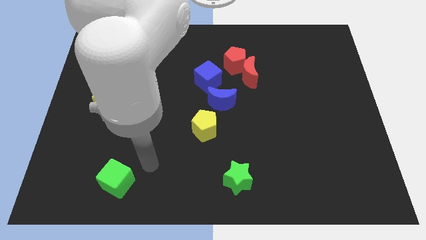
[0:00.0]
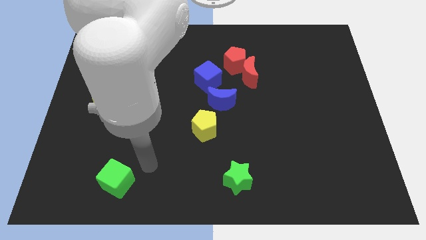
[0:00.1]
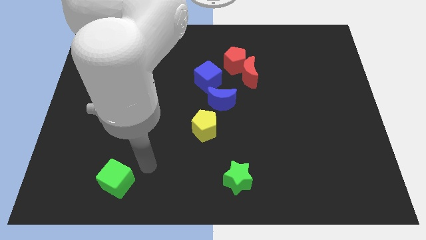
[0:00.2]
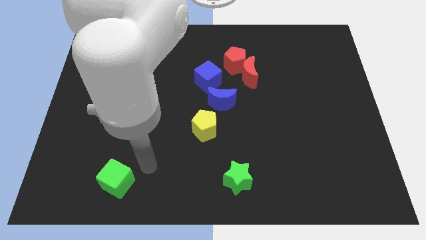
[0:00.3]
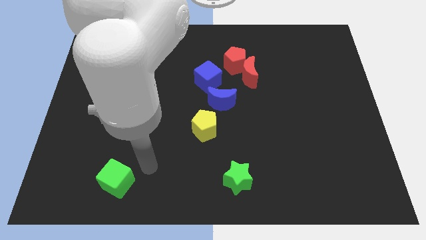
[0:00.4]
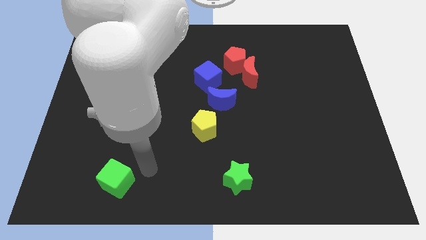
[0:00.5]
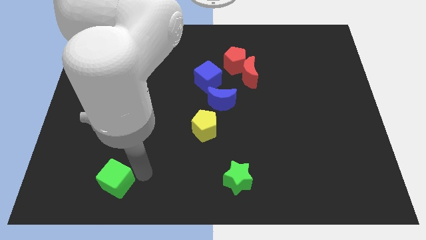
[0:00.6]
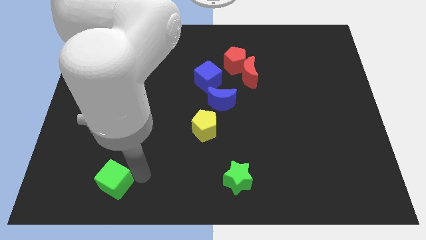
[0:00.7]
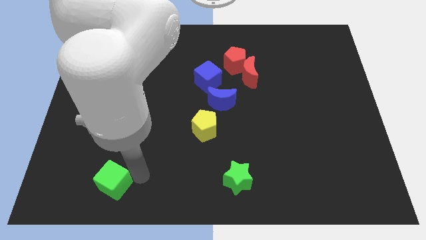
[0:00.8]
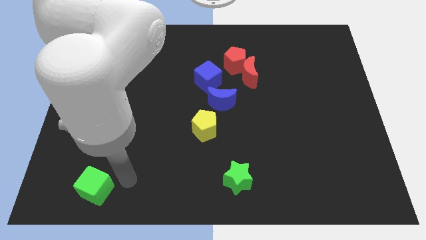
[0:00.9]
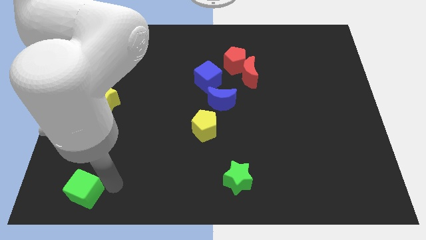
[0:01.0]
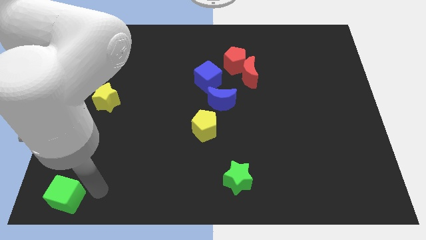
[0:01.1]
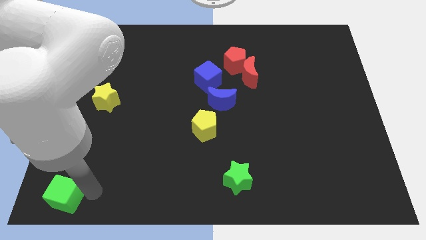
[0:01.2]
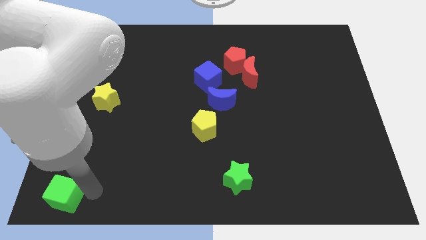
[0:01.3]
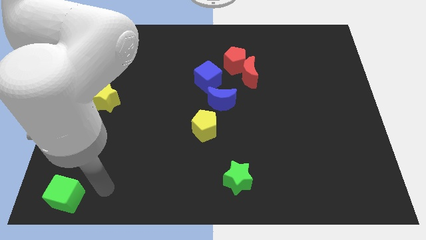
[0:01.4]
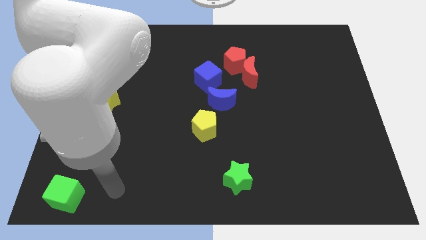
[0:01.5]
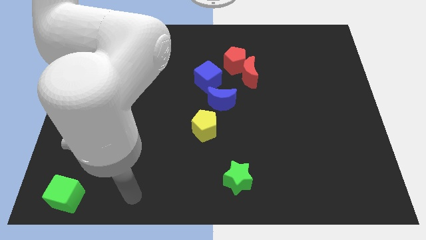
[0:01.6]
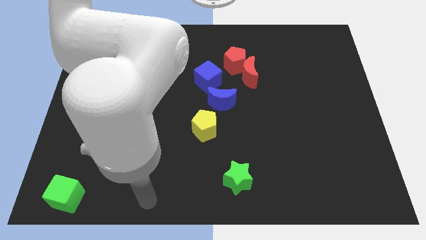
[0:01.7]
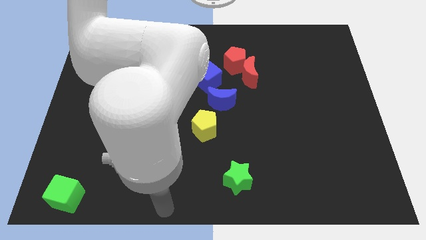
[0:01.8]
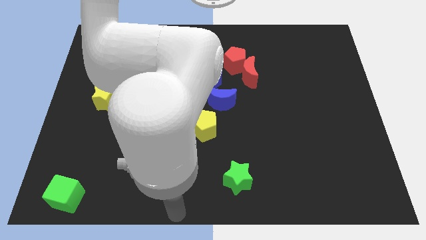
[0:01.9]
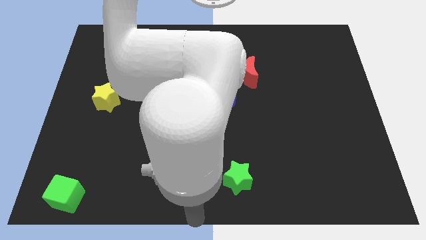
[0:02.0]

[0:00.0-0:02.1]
push green cube to the bottom left

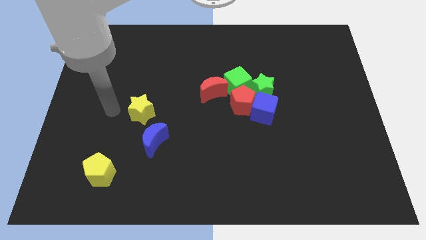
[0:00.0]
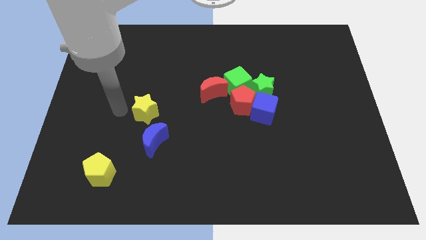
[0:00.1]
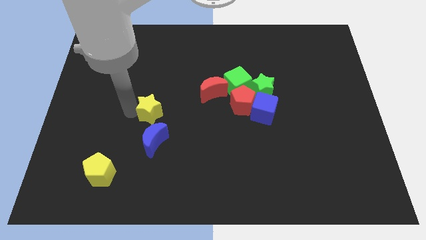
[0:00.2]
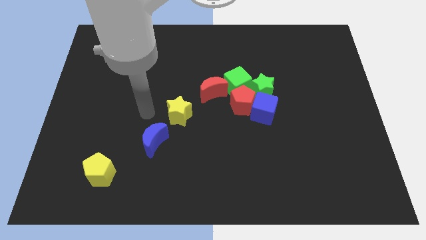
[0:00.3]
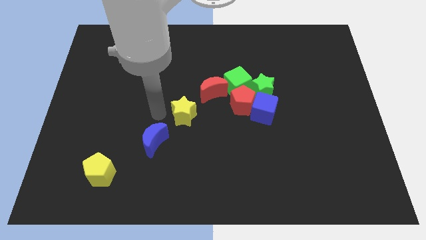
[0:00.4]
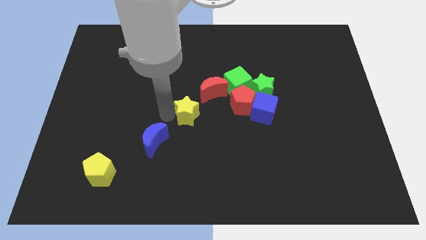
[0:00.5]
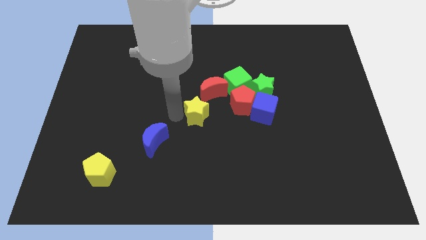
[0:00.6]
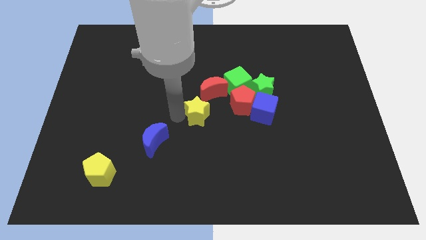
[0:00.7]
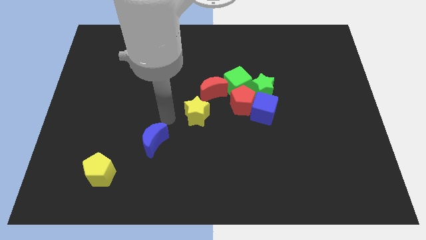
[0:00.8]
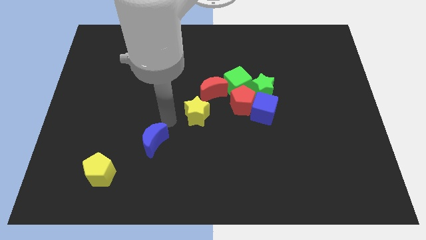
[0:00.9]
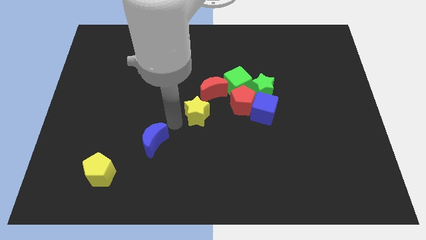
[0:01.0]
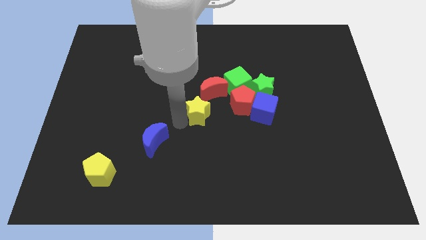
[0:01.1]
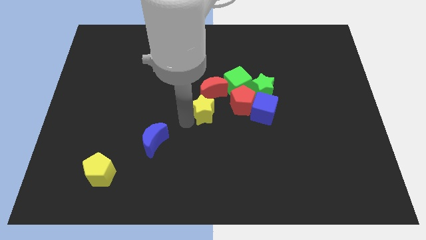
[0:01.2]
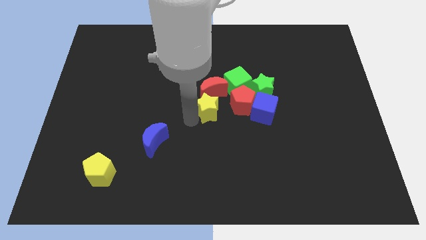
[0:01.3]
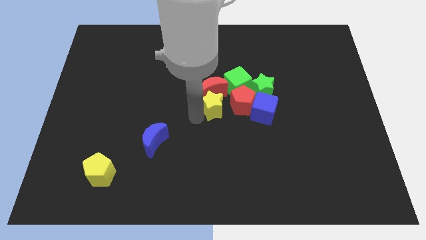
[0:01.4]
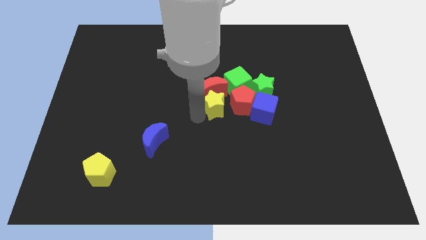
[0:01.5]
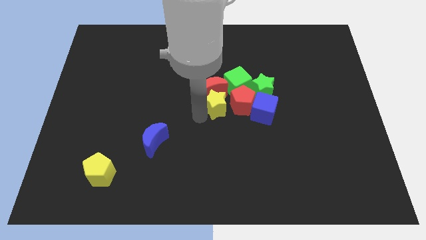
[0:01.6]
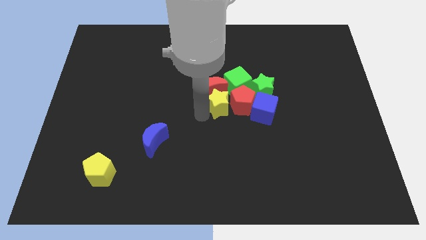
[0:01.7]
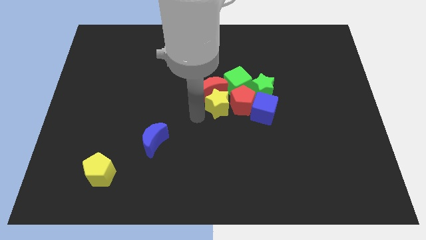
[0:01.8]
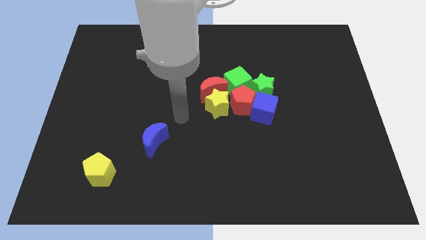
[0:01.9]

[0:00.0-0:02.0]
move the yellow star below into the group of blocks at the center

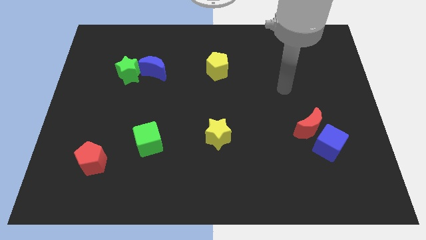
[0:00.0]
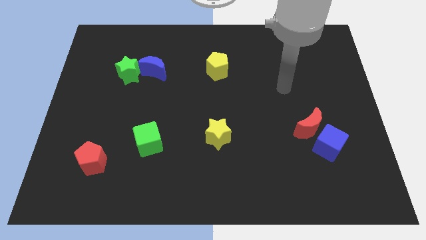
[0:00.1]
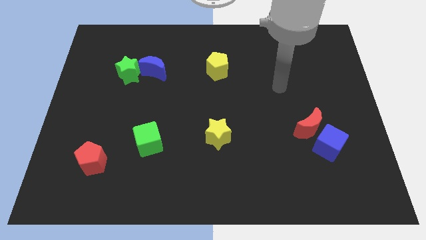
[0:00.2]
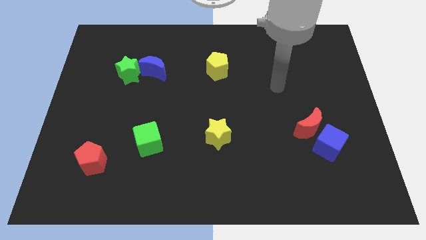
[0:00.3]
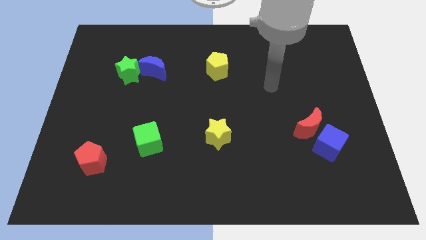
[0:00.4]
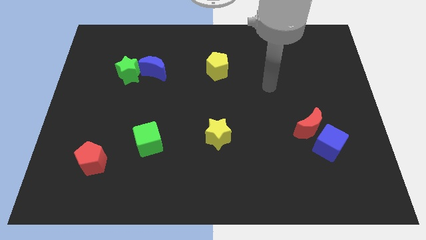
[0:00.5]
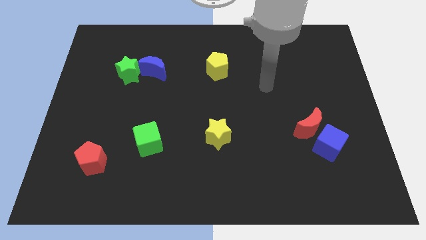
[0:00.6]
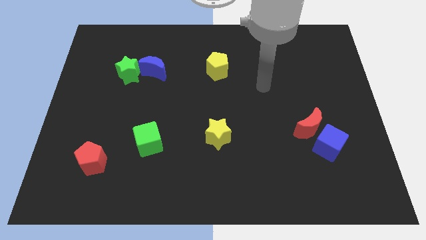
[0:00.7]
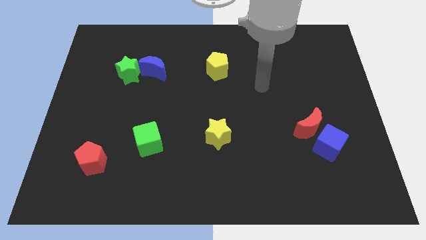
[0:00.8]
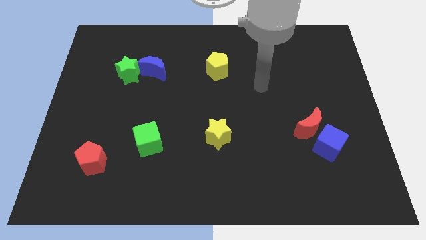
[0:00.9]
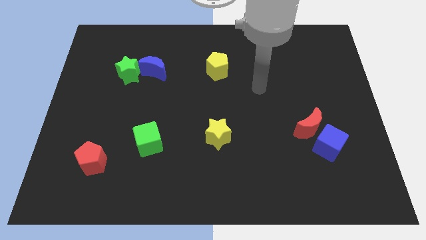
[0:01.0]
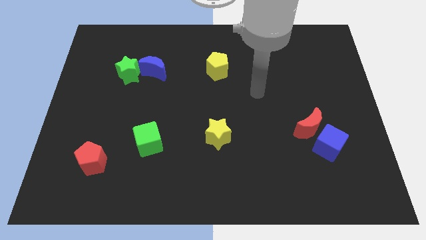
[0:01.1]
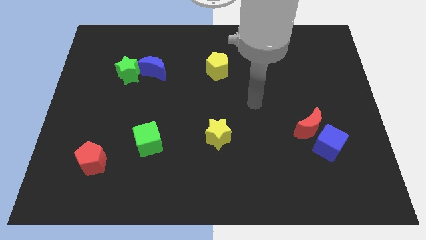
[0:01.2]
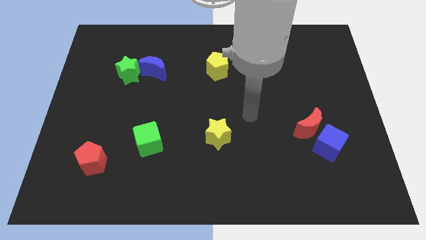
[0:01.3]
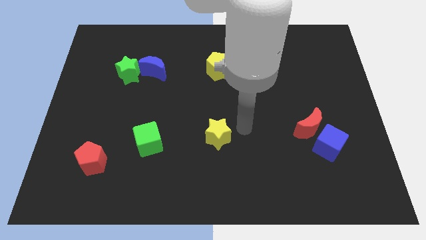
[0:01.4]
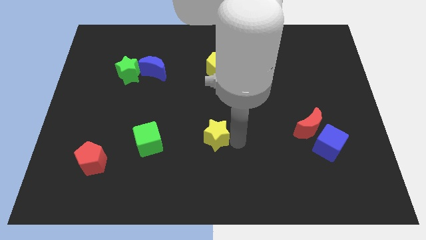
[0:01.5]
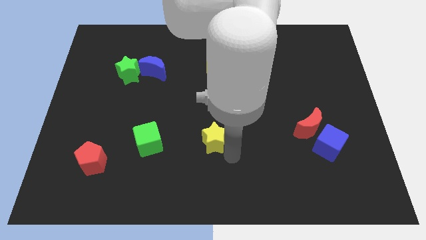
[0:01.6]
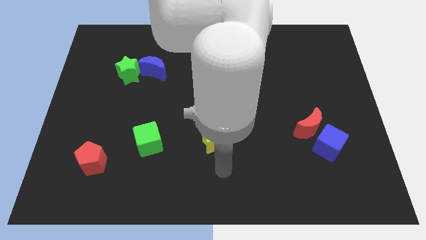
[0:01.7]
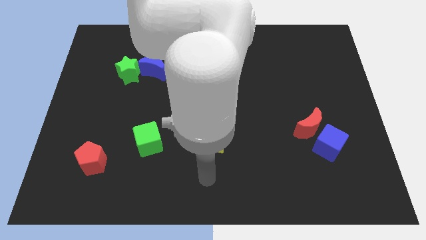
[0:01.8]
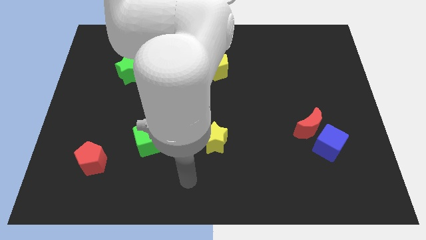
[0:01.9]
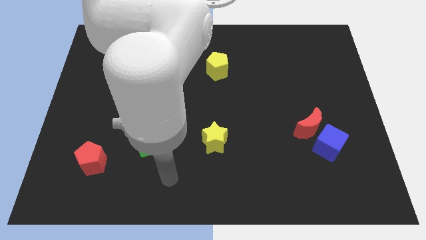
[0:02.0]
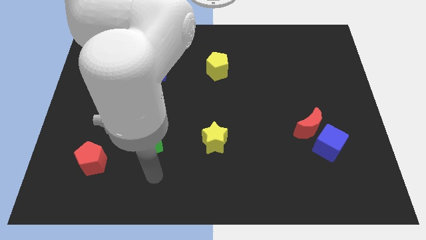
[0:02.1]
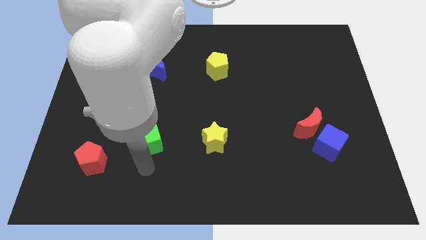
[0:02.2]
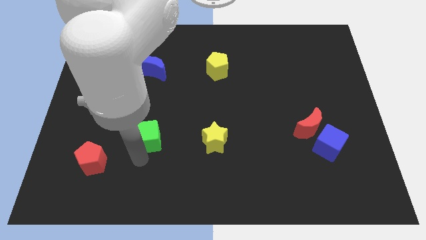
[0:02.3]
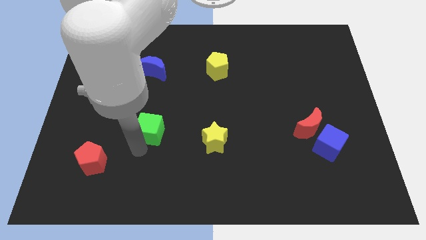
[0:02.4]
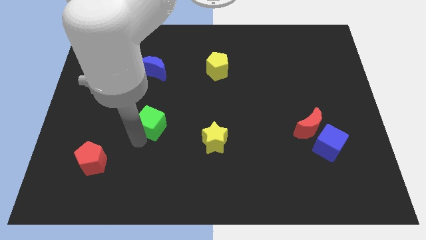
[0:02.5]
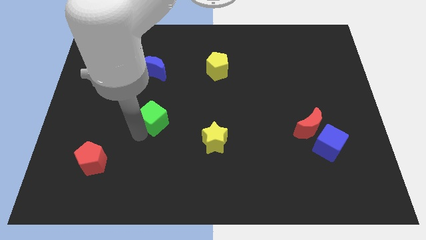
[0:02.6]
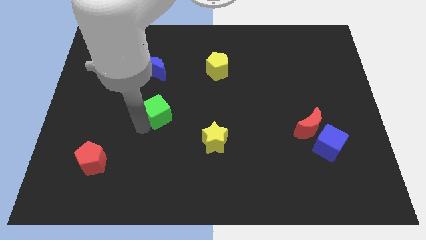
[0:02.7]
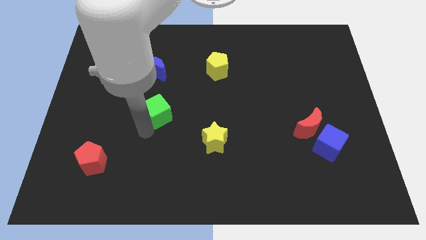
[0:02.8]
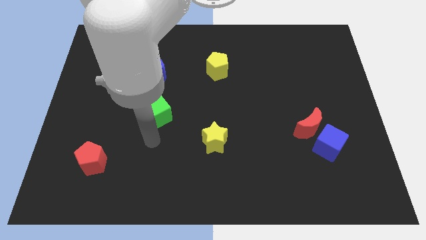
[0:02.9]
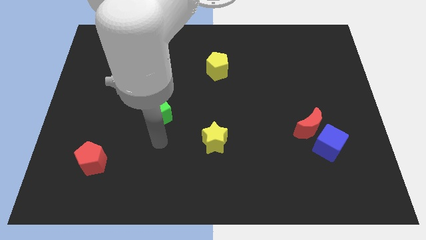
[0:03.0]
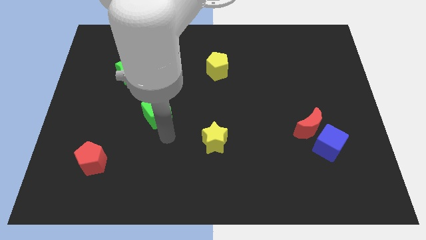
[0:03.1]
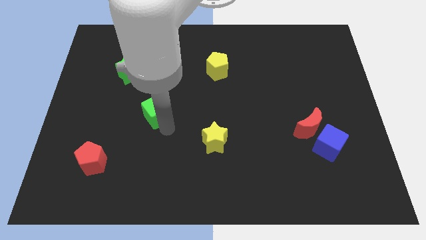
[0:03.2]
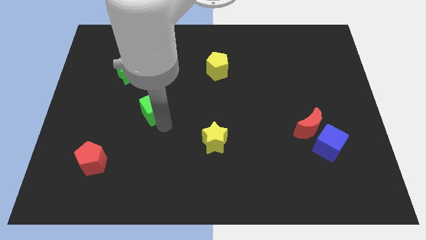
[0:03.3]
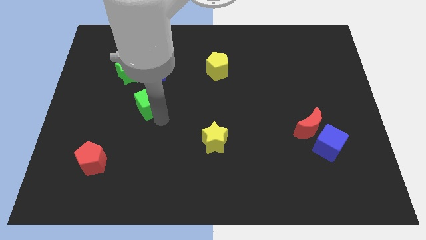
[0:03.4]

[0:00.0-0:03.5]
slightly touch the yellow star

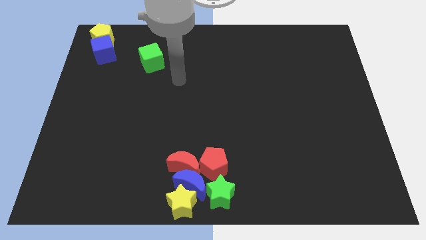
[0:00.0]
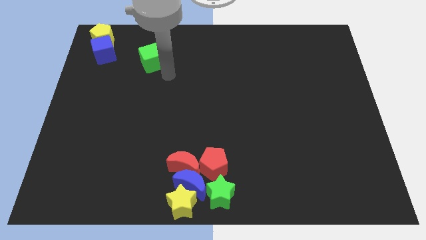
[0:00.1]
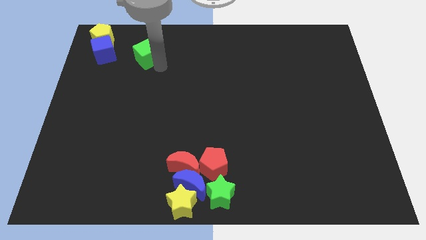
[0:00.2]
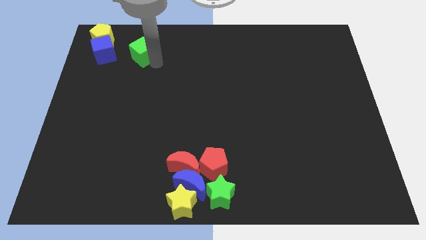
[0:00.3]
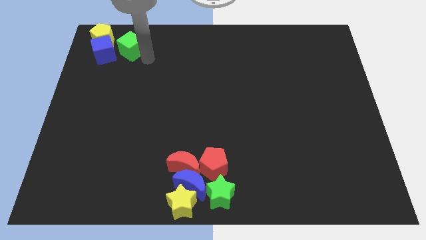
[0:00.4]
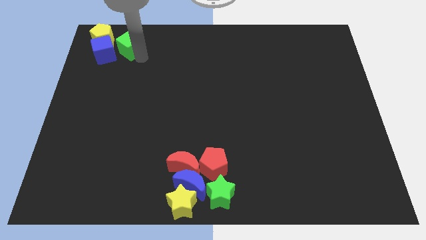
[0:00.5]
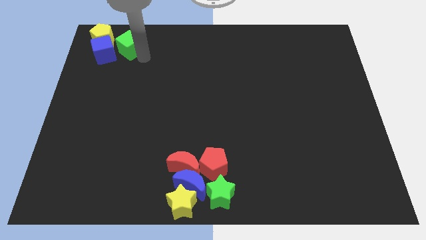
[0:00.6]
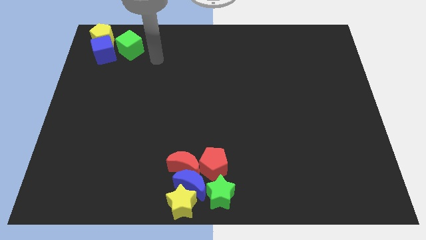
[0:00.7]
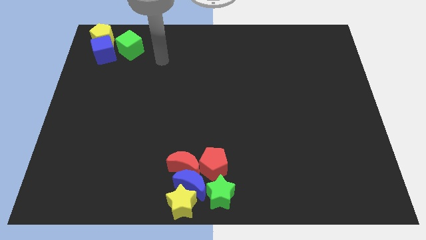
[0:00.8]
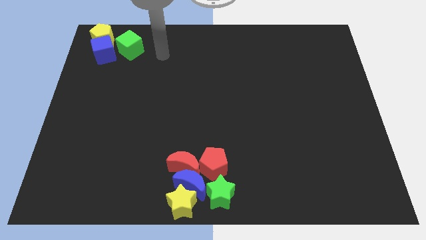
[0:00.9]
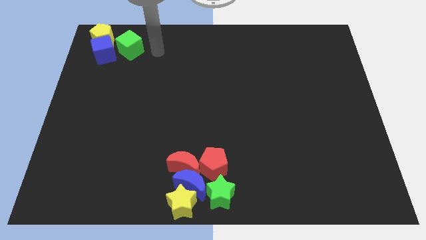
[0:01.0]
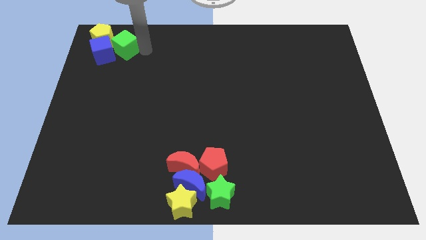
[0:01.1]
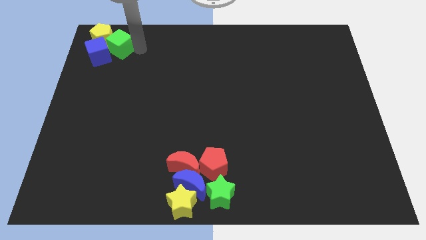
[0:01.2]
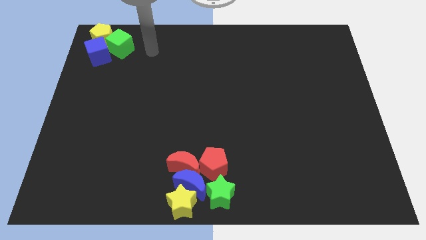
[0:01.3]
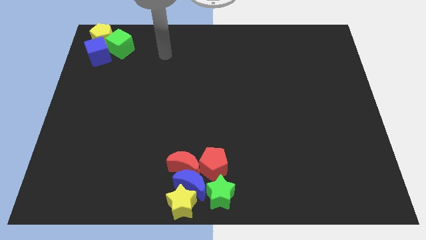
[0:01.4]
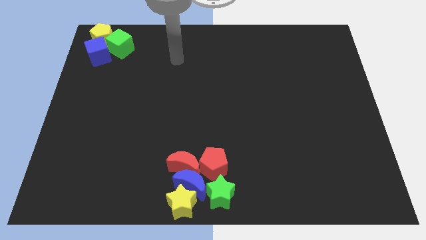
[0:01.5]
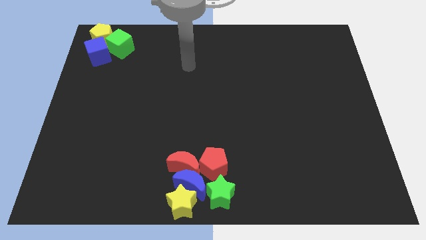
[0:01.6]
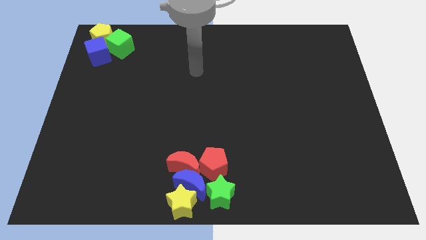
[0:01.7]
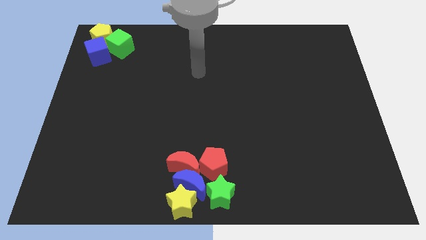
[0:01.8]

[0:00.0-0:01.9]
slide the green cube into the blue cube
